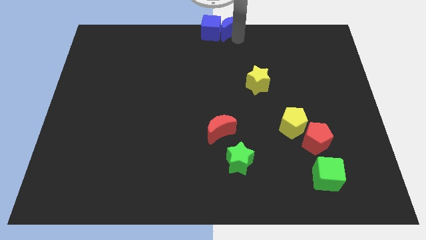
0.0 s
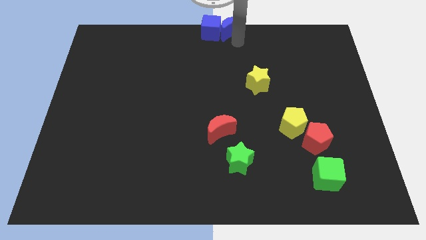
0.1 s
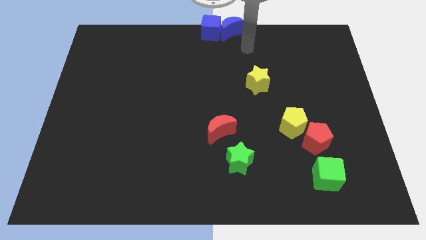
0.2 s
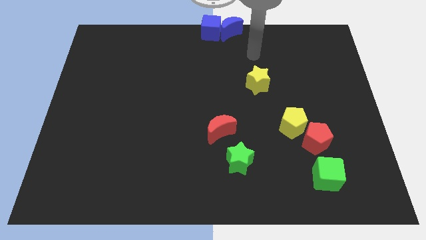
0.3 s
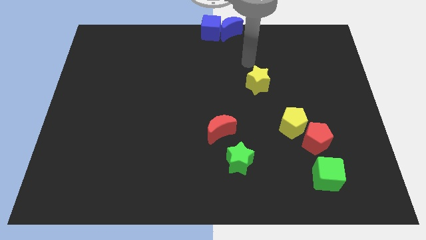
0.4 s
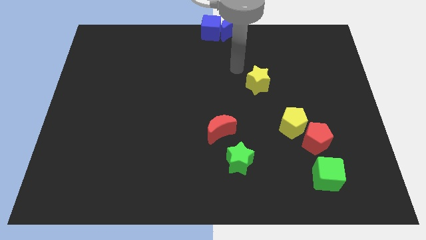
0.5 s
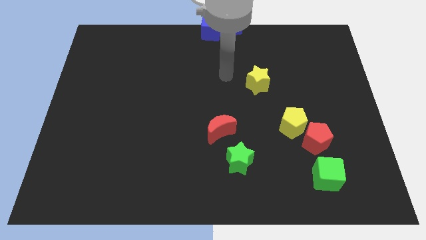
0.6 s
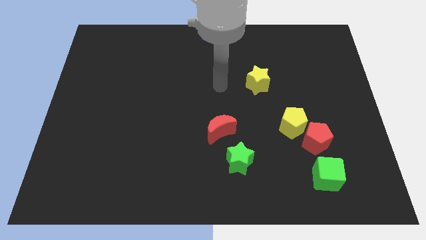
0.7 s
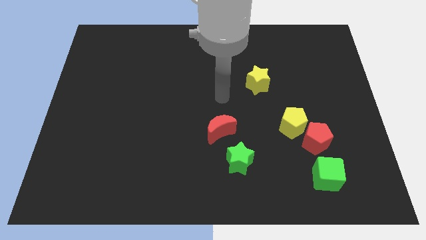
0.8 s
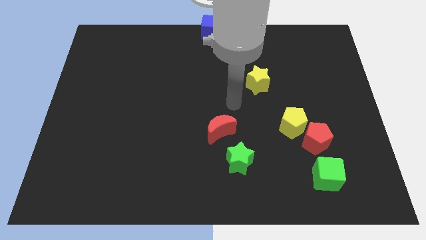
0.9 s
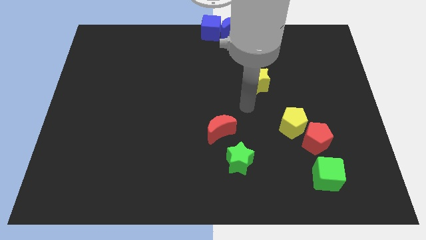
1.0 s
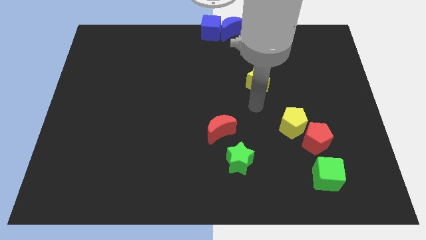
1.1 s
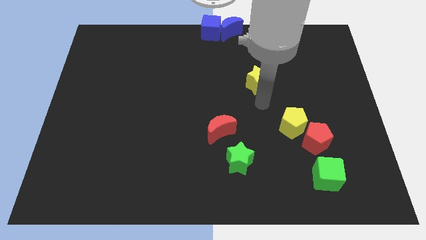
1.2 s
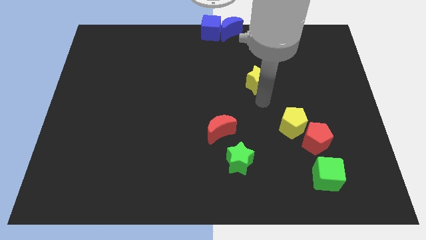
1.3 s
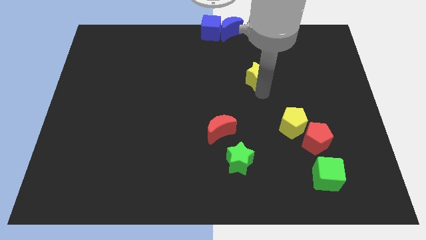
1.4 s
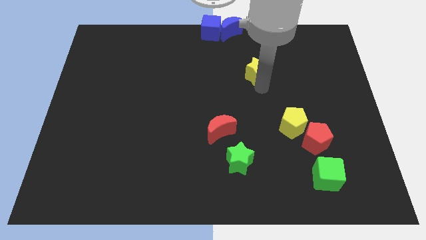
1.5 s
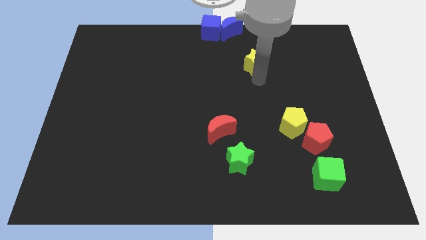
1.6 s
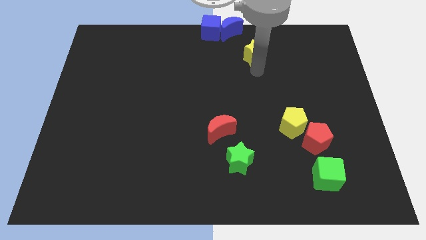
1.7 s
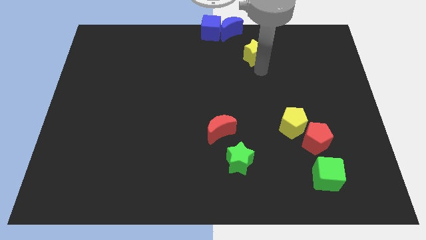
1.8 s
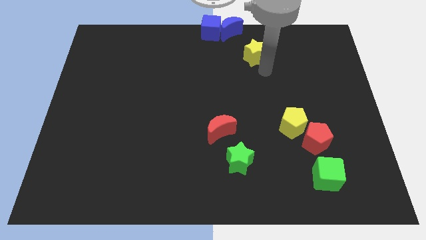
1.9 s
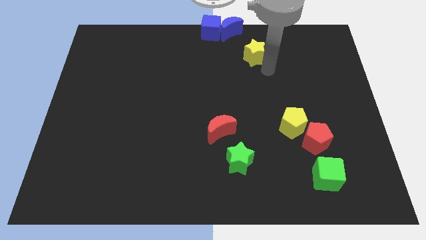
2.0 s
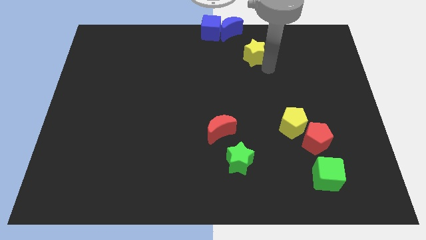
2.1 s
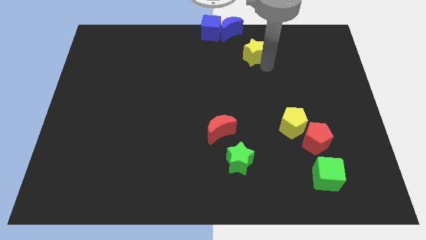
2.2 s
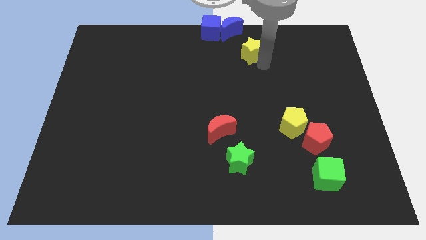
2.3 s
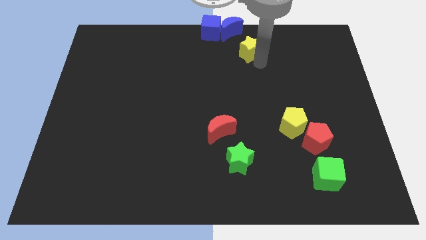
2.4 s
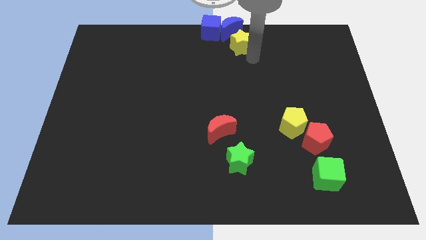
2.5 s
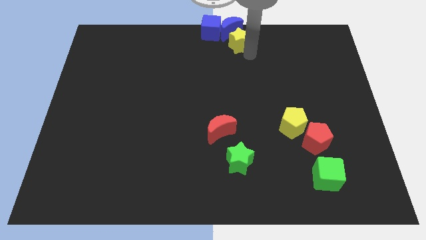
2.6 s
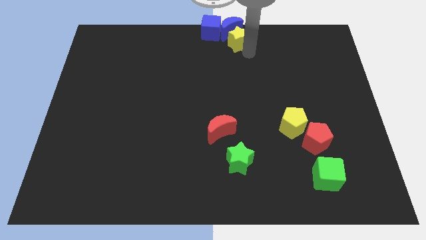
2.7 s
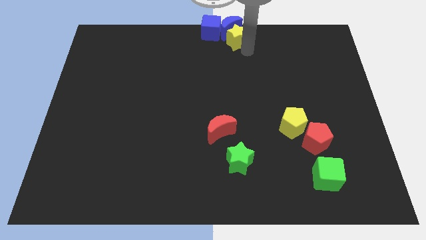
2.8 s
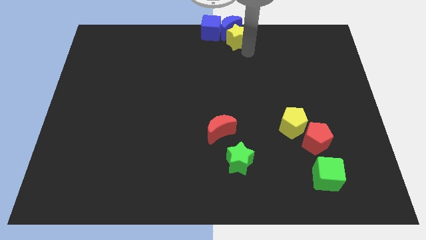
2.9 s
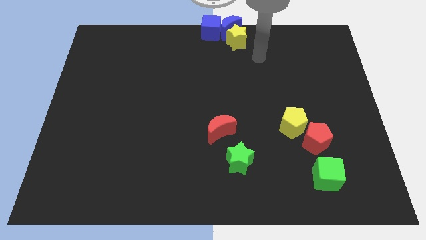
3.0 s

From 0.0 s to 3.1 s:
push the yellow start to the top center of the board

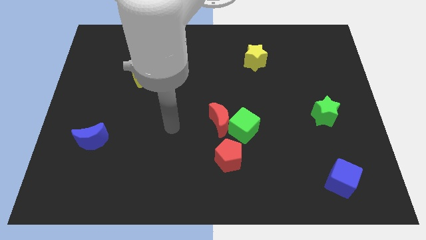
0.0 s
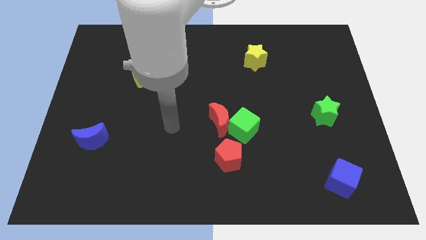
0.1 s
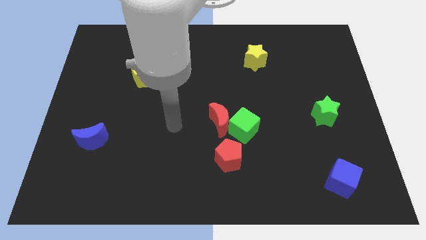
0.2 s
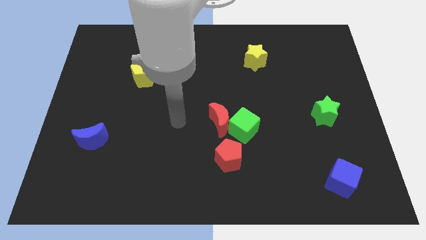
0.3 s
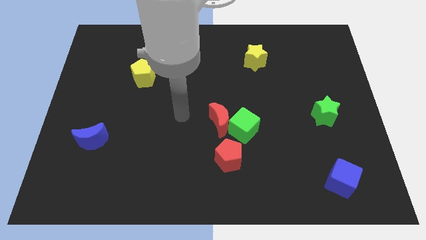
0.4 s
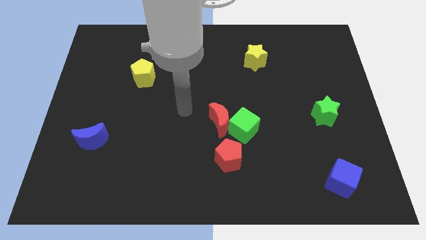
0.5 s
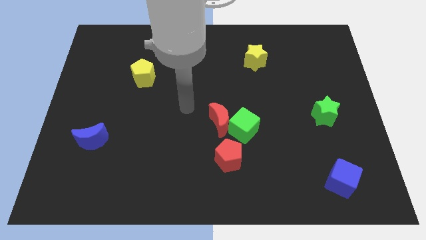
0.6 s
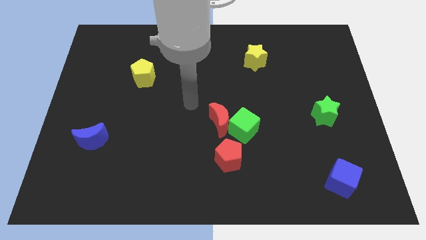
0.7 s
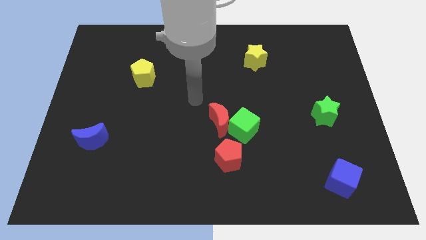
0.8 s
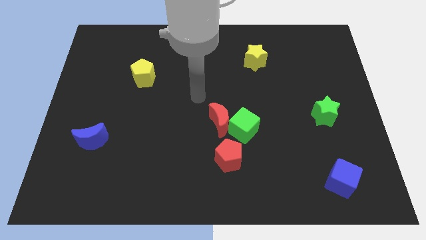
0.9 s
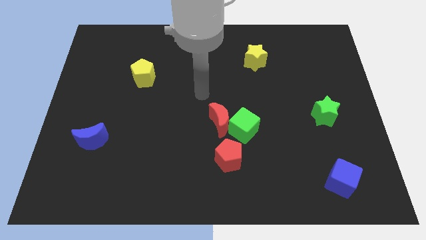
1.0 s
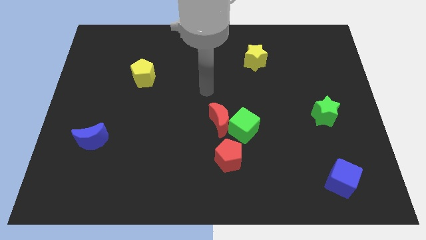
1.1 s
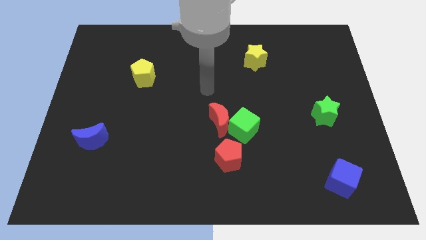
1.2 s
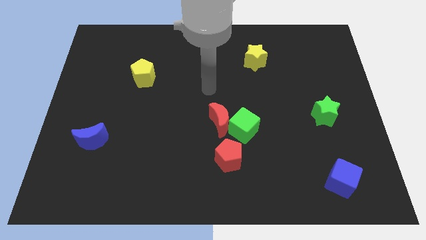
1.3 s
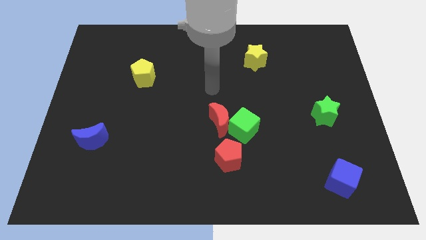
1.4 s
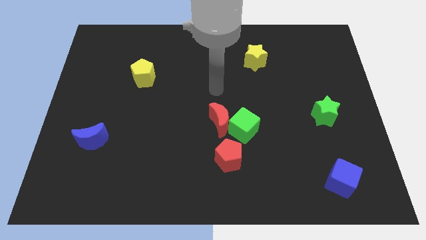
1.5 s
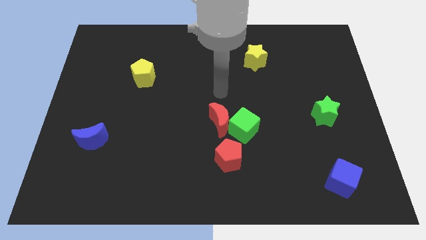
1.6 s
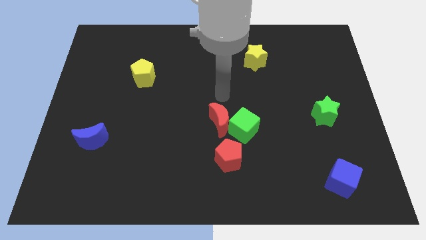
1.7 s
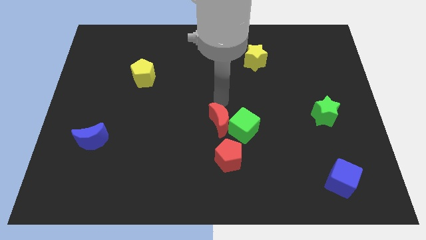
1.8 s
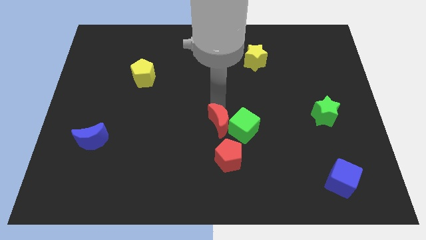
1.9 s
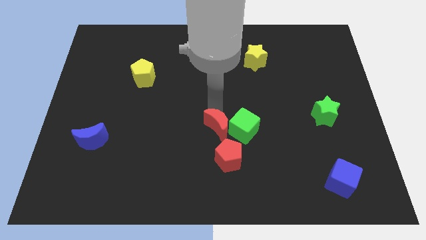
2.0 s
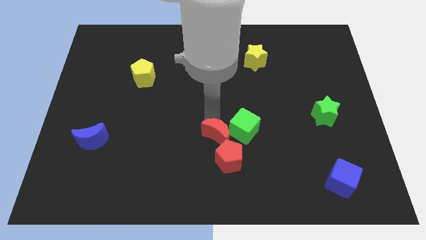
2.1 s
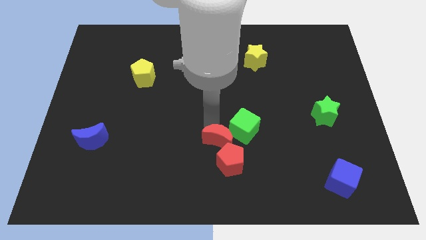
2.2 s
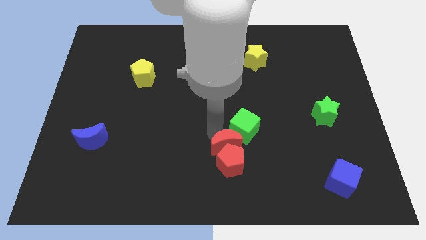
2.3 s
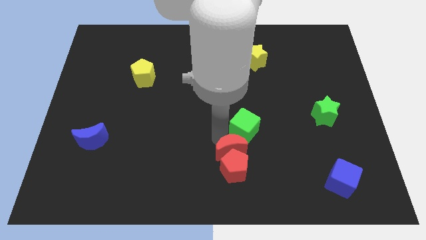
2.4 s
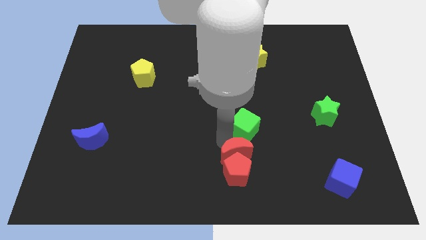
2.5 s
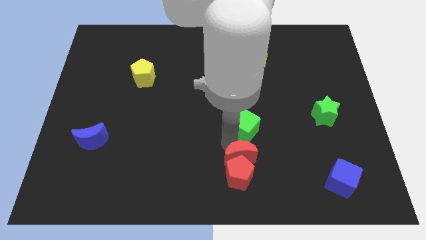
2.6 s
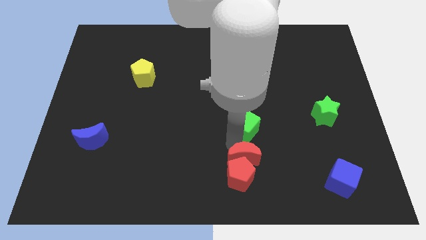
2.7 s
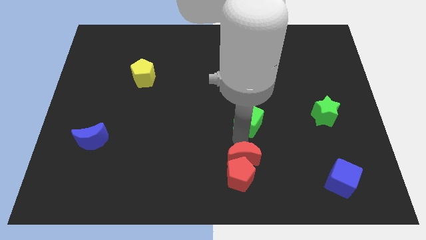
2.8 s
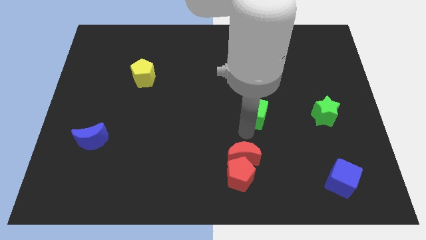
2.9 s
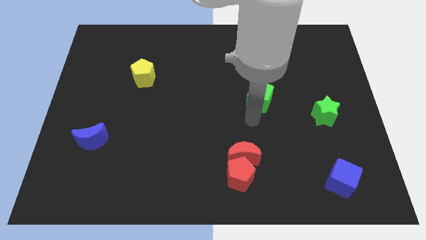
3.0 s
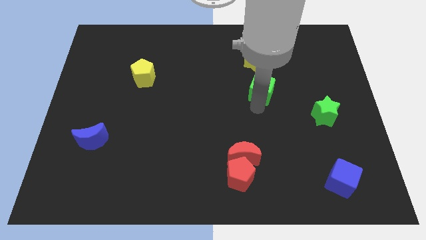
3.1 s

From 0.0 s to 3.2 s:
push the red blocks to the bottom center

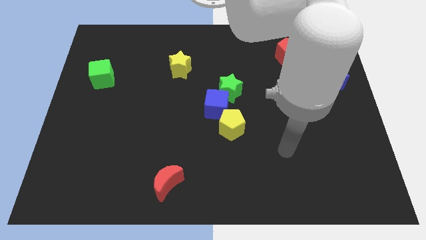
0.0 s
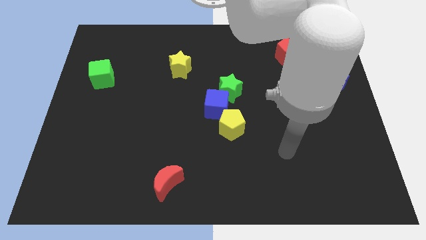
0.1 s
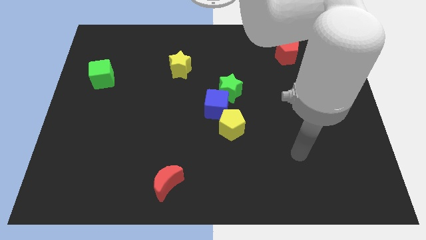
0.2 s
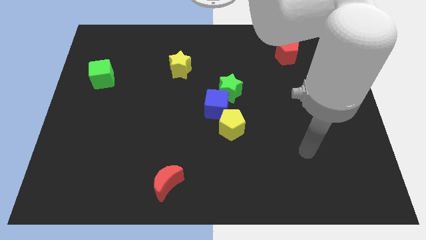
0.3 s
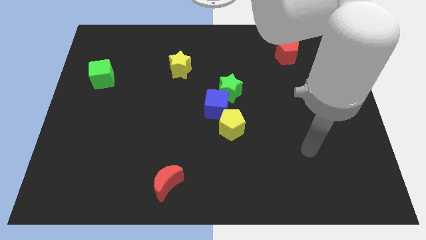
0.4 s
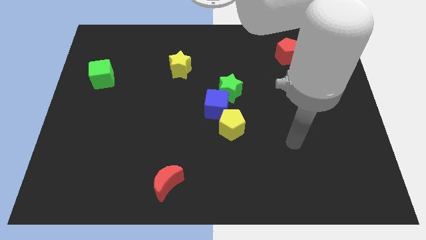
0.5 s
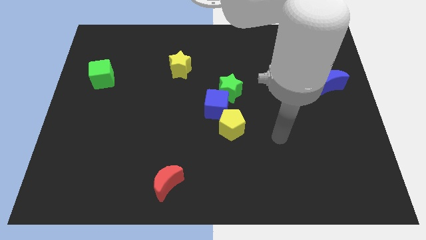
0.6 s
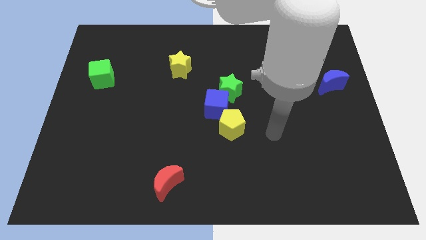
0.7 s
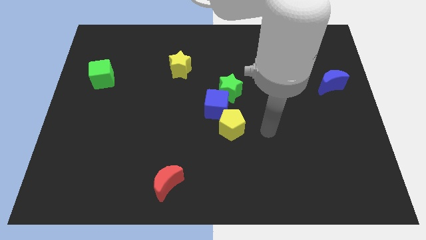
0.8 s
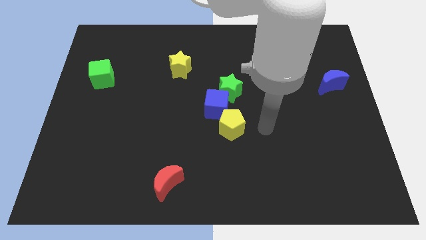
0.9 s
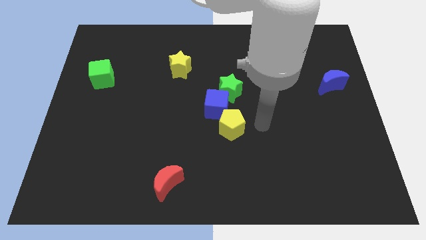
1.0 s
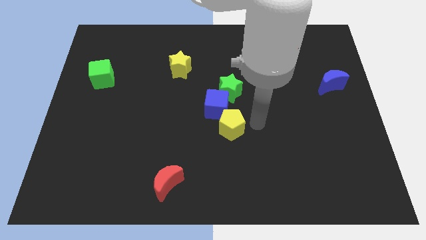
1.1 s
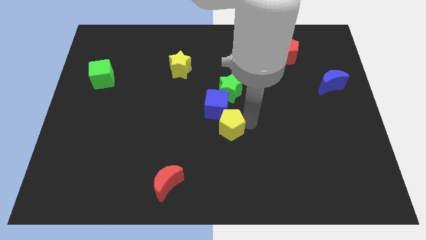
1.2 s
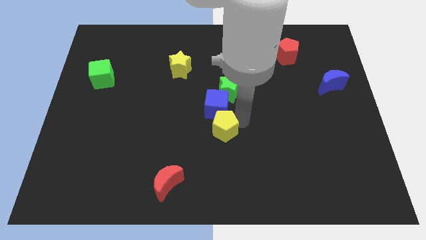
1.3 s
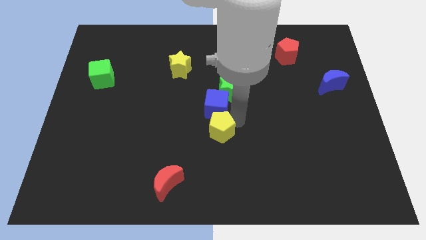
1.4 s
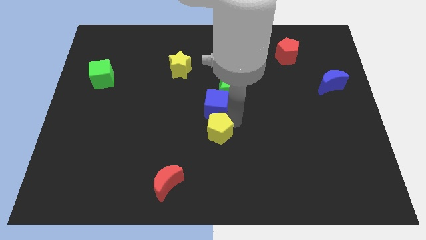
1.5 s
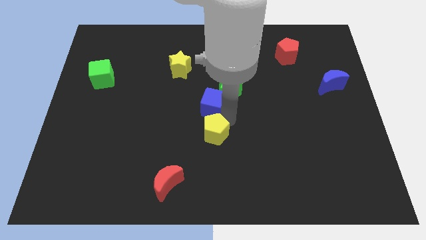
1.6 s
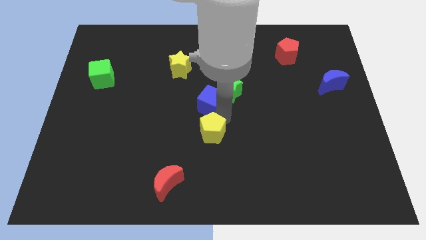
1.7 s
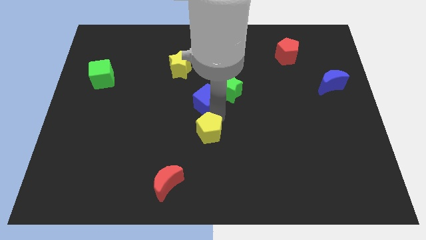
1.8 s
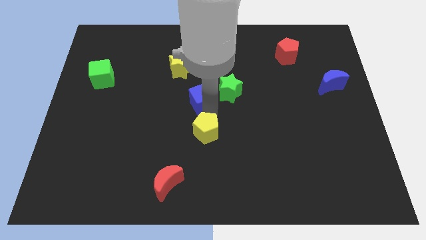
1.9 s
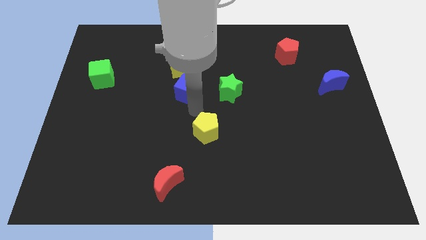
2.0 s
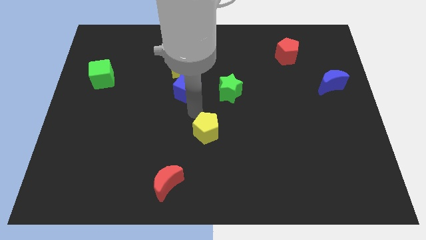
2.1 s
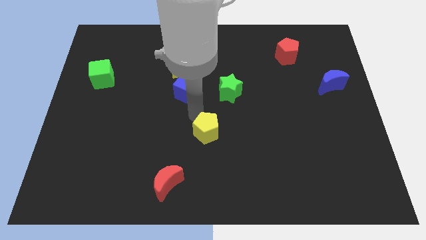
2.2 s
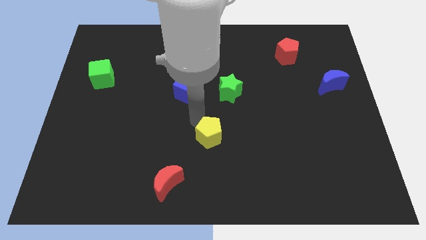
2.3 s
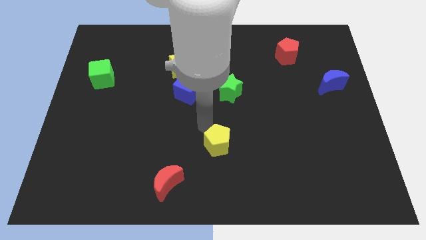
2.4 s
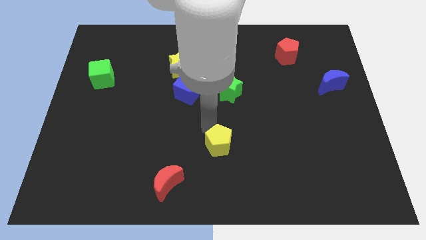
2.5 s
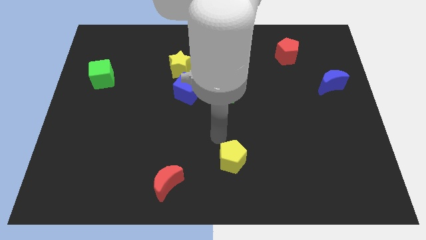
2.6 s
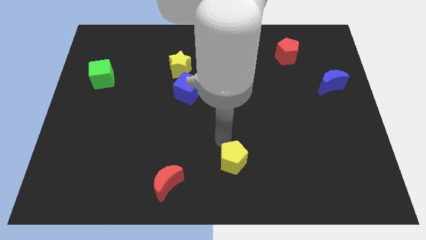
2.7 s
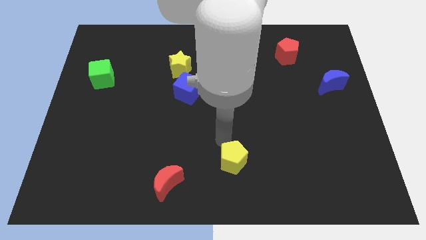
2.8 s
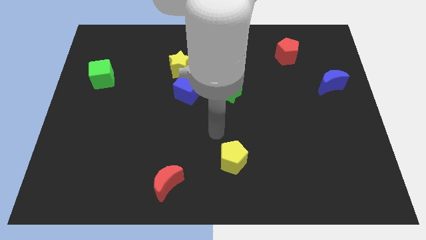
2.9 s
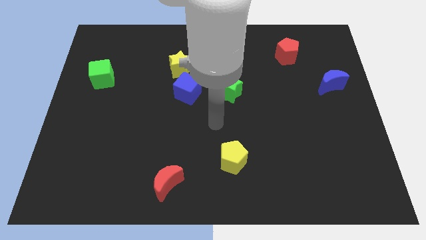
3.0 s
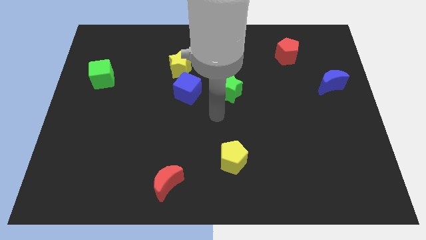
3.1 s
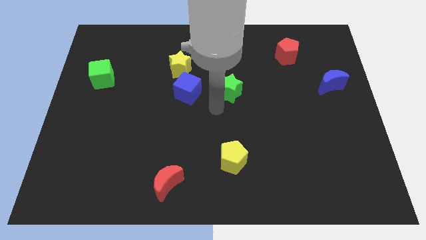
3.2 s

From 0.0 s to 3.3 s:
separate yellow pentagon and blue cube
